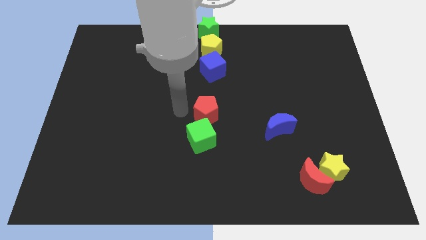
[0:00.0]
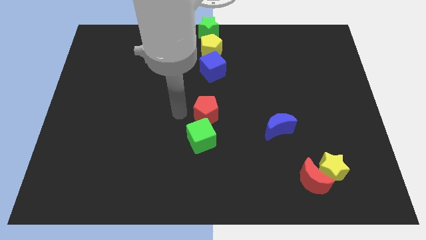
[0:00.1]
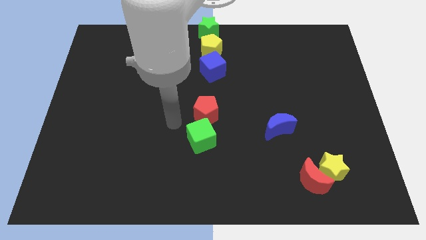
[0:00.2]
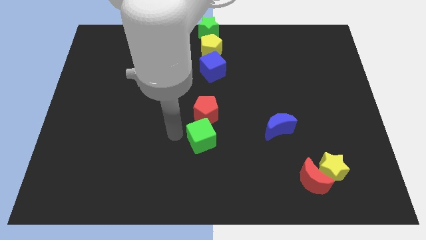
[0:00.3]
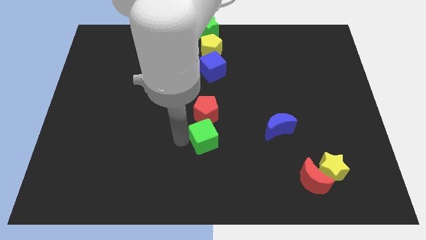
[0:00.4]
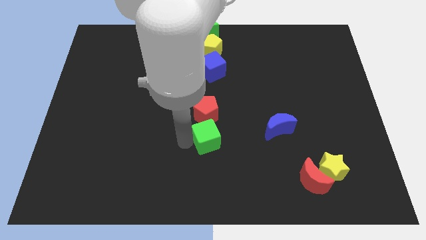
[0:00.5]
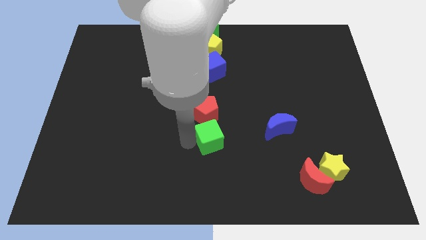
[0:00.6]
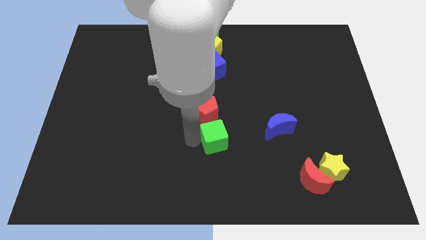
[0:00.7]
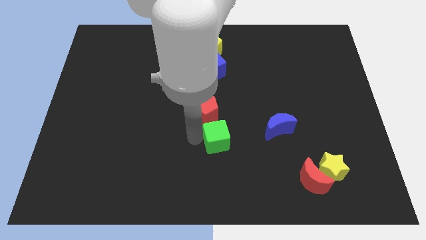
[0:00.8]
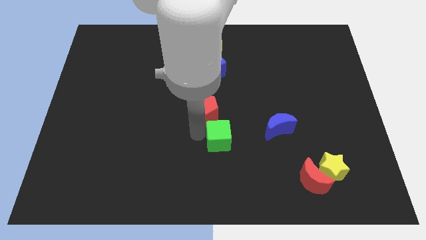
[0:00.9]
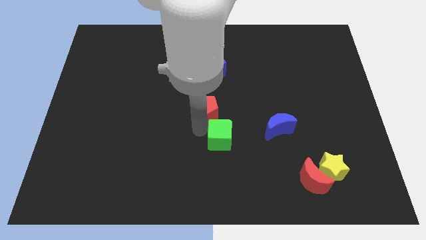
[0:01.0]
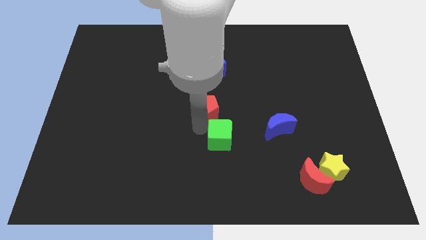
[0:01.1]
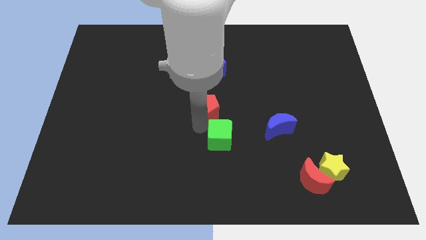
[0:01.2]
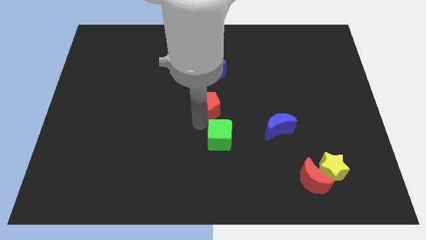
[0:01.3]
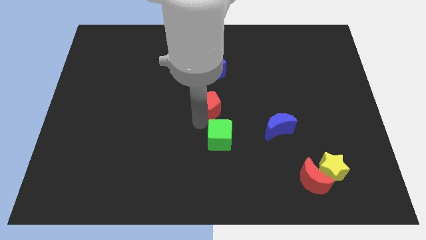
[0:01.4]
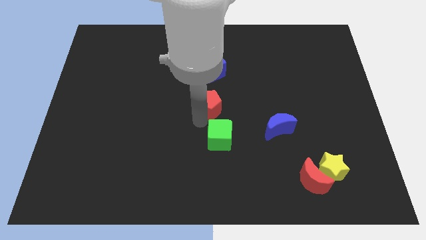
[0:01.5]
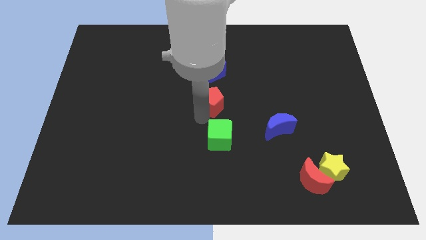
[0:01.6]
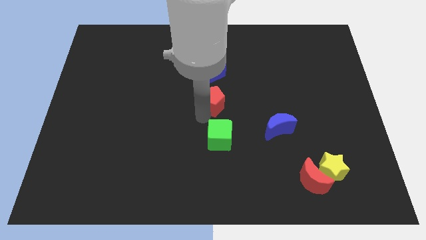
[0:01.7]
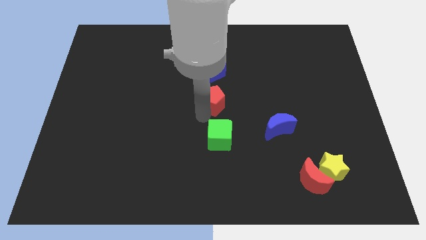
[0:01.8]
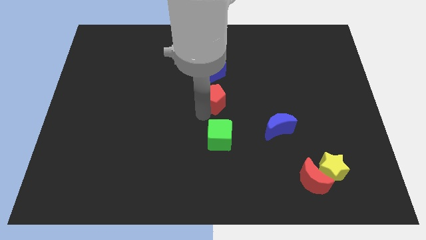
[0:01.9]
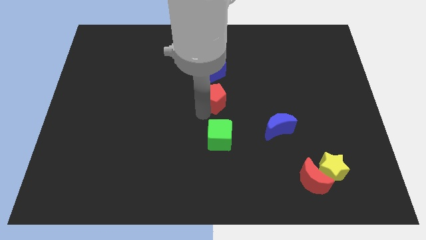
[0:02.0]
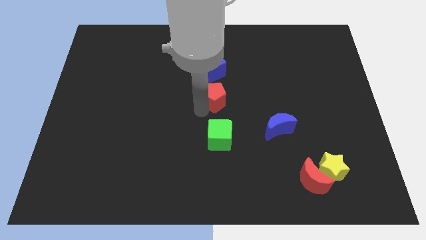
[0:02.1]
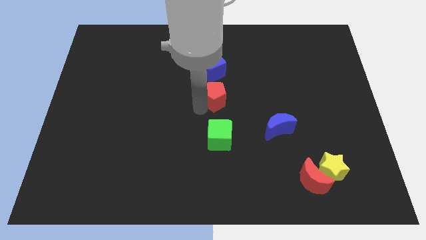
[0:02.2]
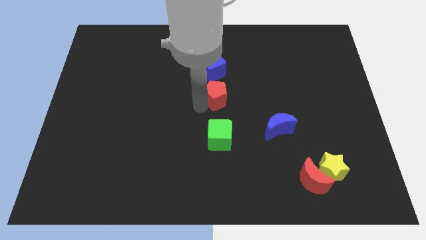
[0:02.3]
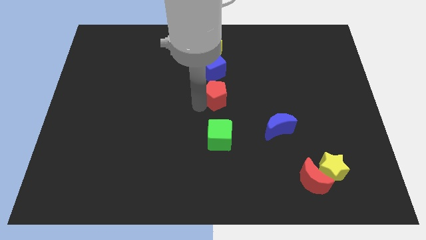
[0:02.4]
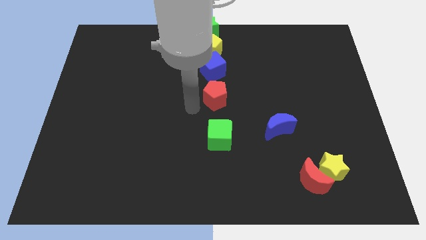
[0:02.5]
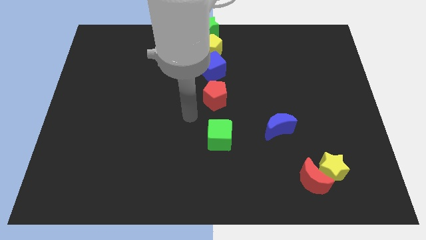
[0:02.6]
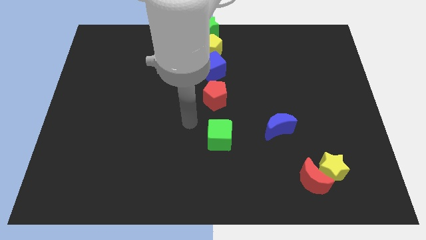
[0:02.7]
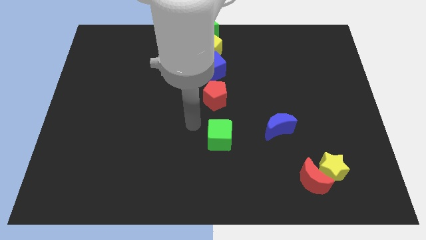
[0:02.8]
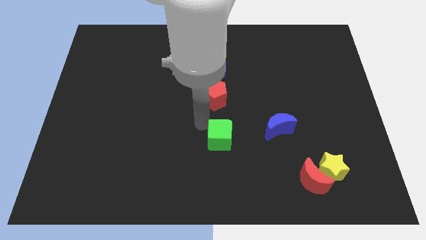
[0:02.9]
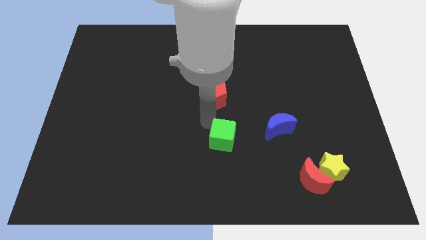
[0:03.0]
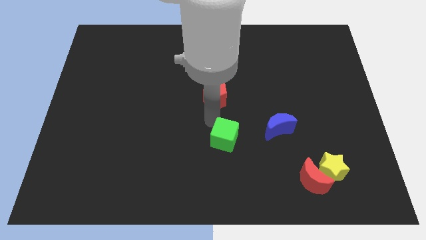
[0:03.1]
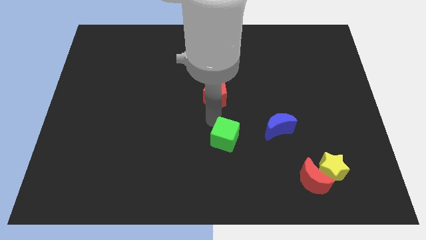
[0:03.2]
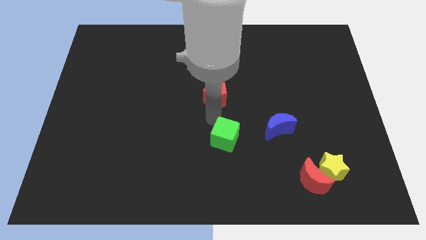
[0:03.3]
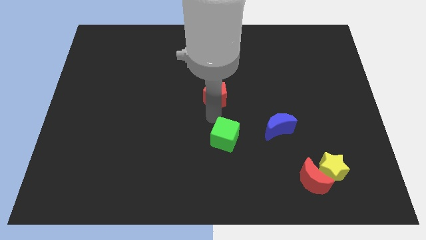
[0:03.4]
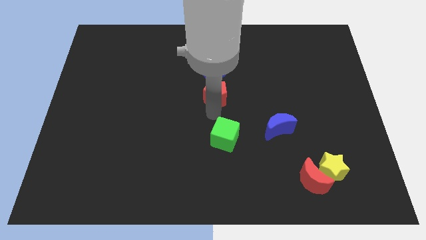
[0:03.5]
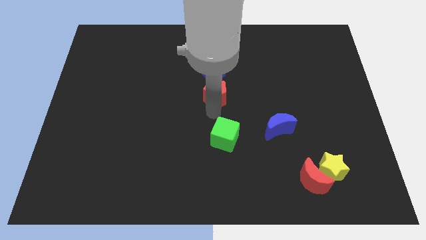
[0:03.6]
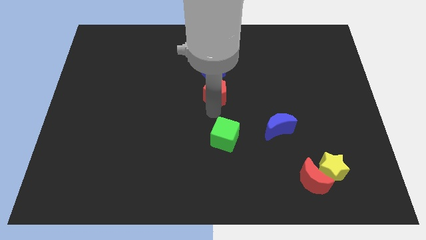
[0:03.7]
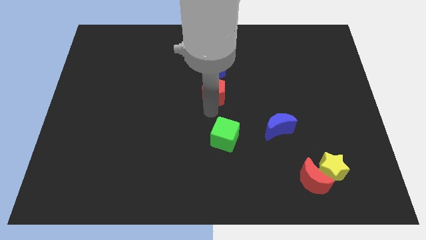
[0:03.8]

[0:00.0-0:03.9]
push the red pentagon to the bottom of the blue cube

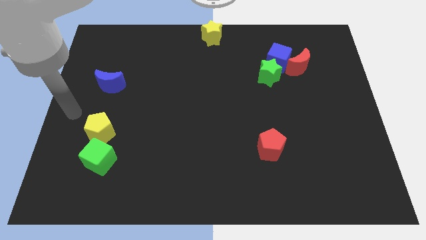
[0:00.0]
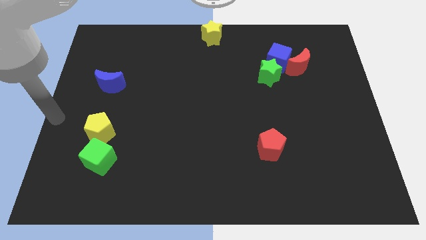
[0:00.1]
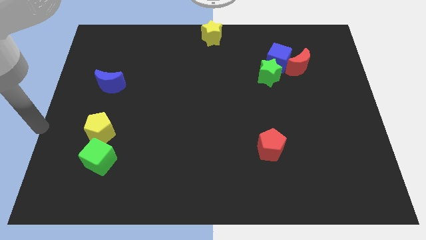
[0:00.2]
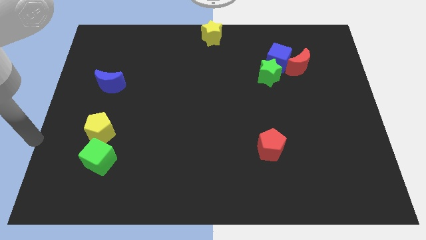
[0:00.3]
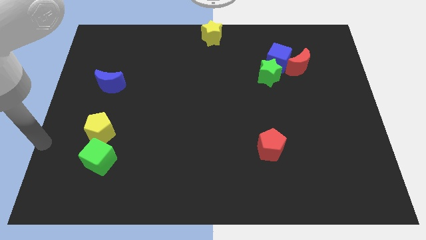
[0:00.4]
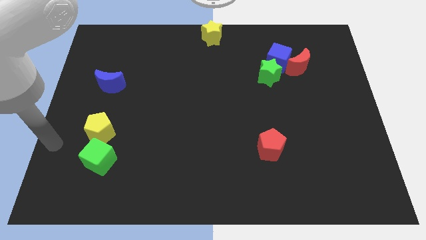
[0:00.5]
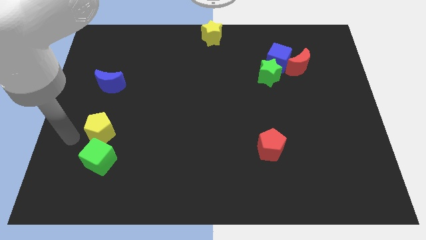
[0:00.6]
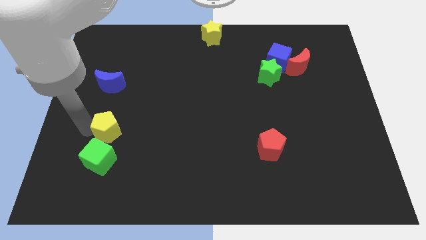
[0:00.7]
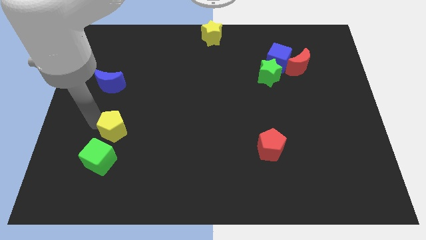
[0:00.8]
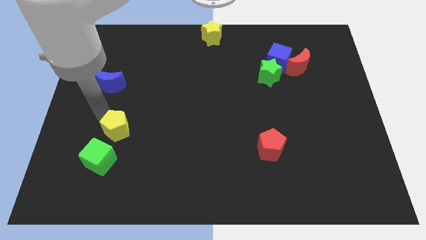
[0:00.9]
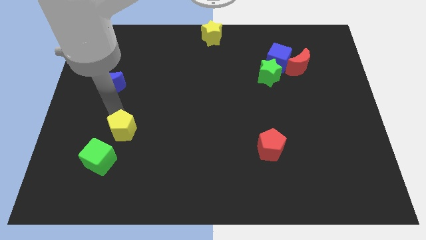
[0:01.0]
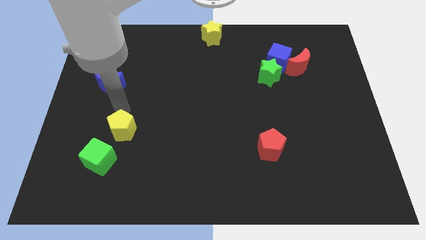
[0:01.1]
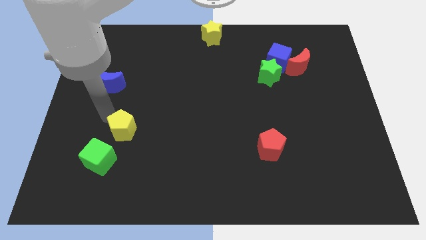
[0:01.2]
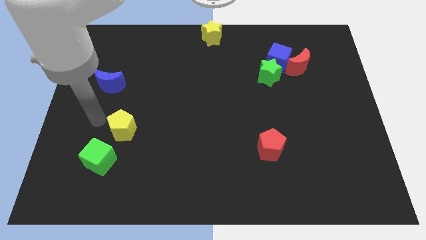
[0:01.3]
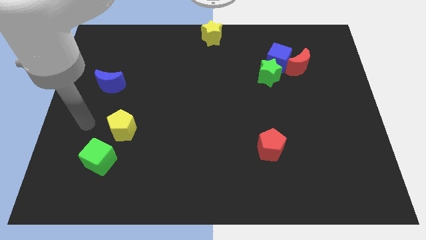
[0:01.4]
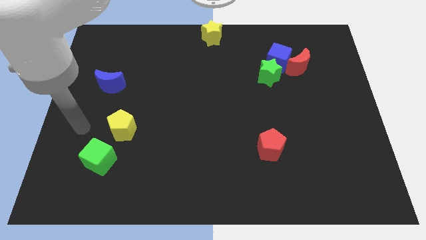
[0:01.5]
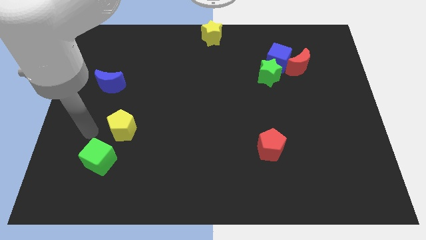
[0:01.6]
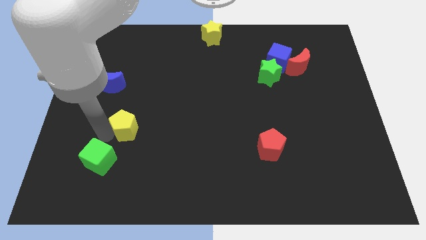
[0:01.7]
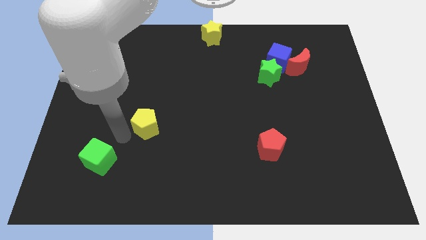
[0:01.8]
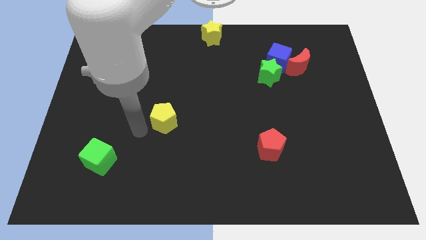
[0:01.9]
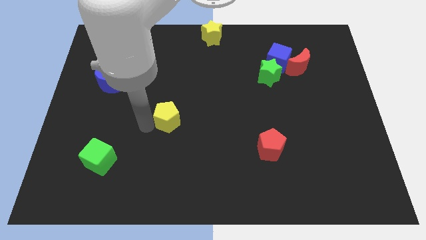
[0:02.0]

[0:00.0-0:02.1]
move the yellow pentagon diagonally bottom right to the blue moon

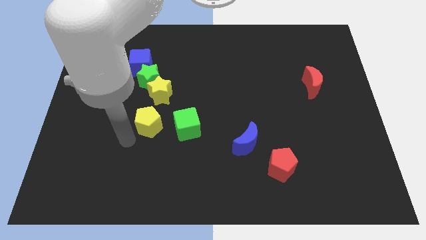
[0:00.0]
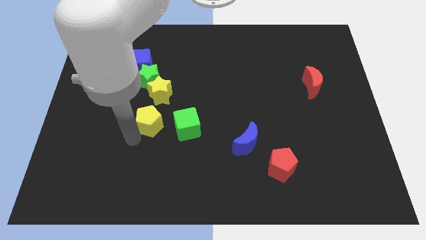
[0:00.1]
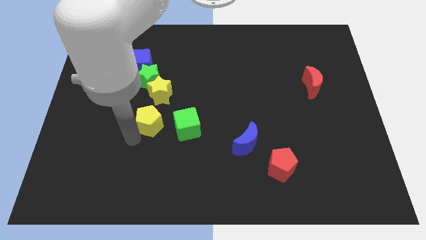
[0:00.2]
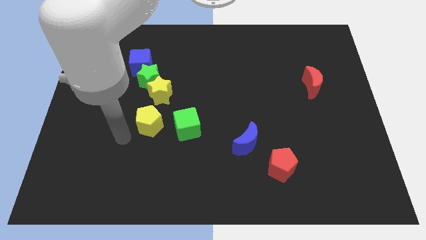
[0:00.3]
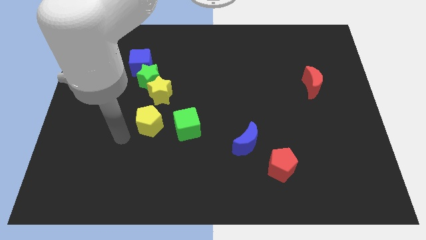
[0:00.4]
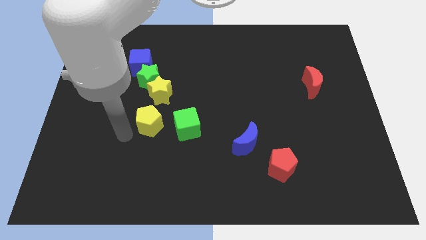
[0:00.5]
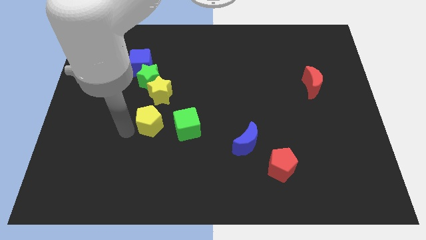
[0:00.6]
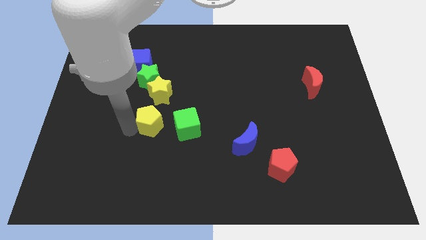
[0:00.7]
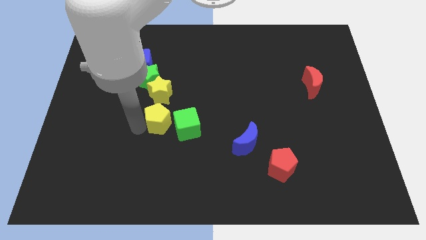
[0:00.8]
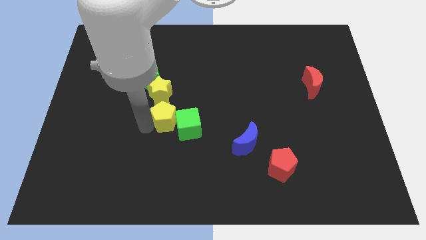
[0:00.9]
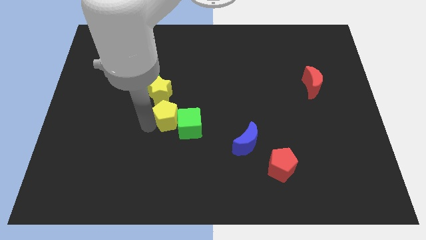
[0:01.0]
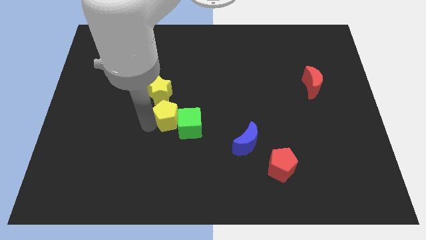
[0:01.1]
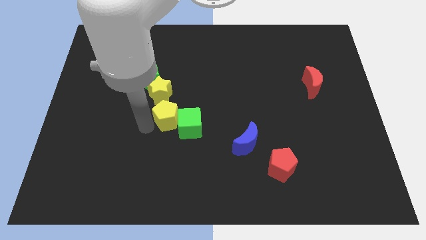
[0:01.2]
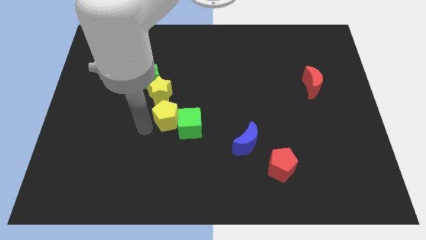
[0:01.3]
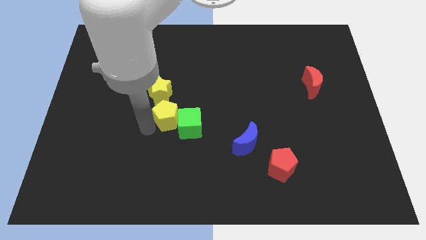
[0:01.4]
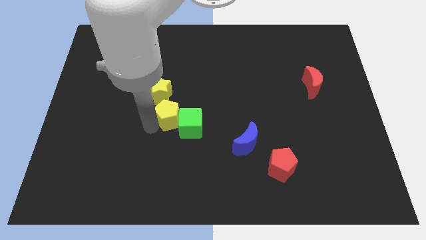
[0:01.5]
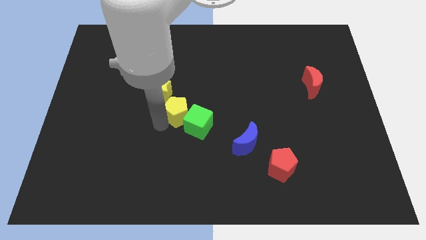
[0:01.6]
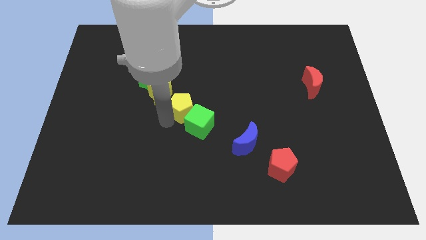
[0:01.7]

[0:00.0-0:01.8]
push the yellow pentagon between green cube and yellow star

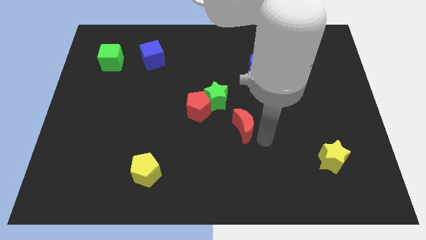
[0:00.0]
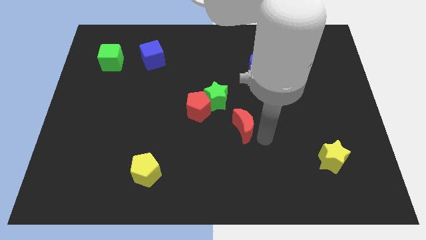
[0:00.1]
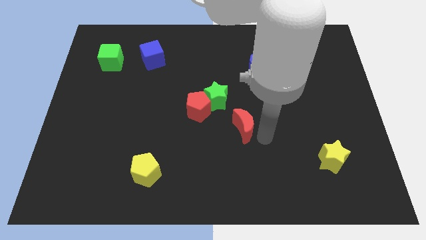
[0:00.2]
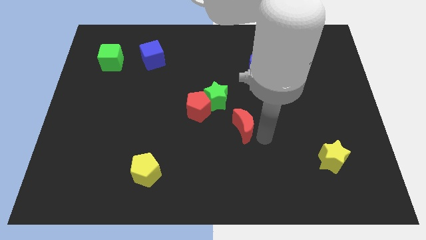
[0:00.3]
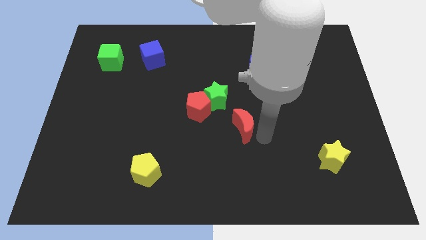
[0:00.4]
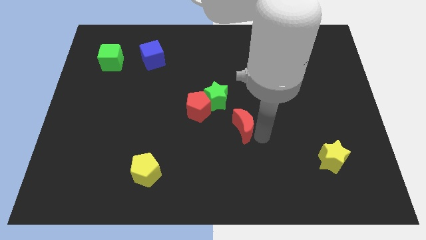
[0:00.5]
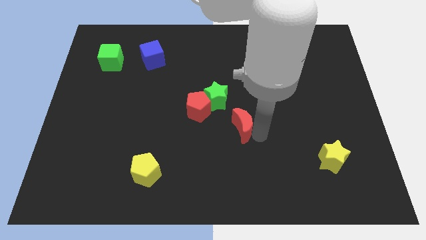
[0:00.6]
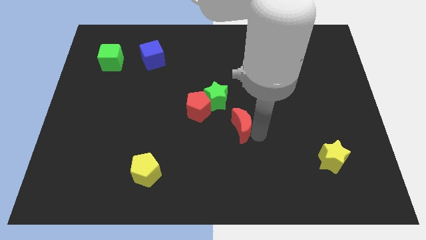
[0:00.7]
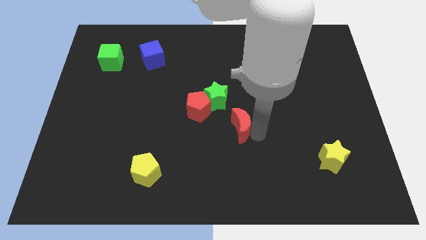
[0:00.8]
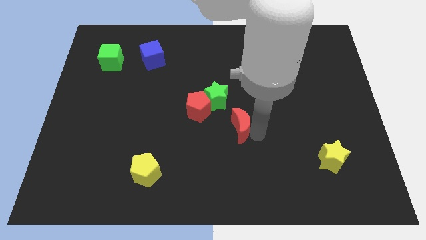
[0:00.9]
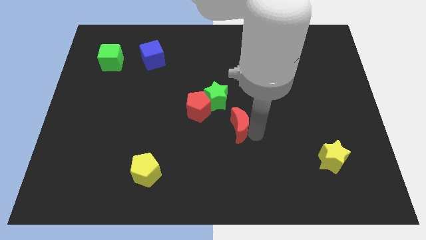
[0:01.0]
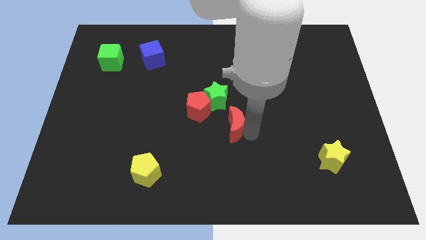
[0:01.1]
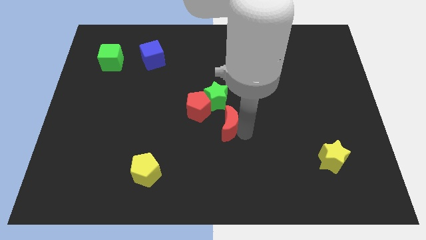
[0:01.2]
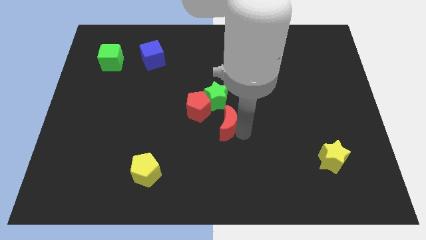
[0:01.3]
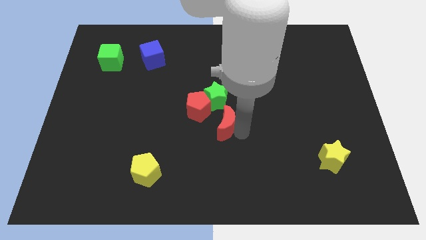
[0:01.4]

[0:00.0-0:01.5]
push the red crescent at the bottom of the green star
